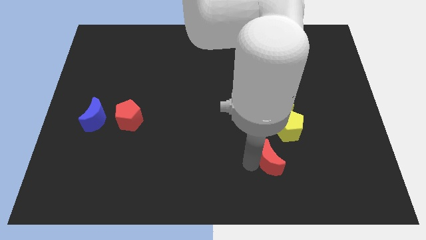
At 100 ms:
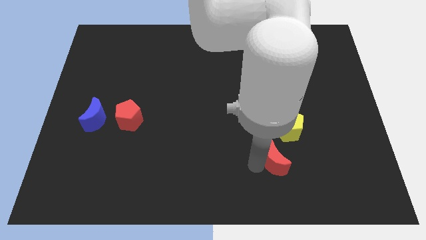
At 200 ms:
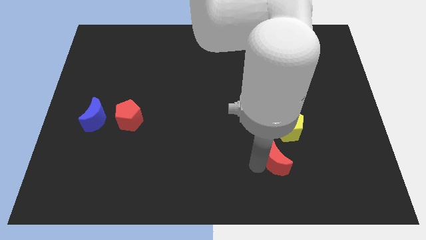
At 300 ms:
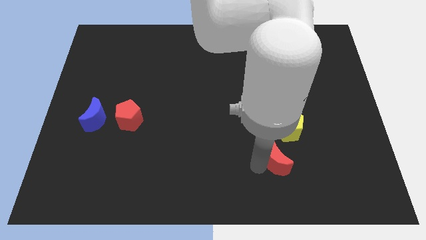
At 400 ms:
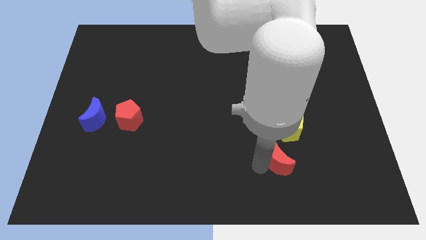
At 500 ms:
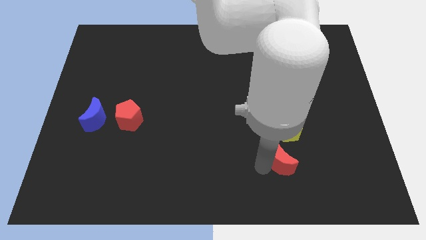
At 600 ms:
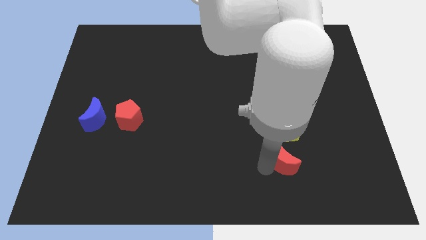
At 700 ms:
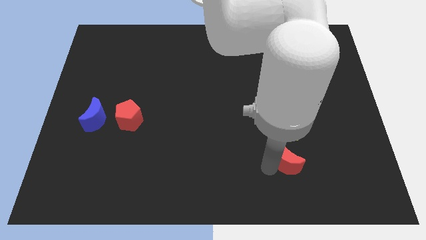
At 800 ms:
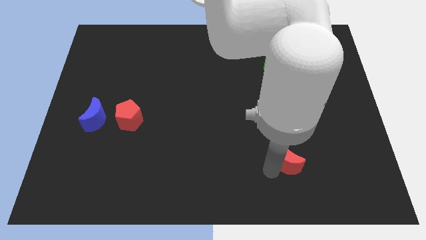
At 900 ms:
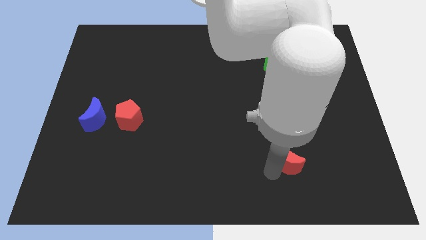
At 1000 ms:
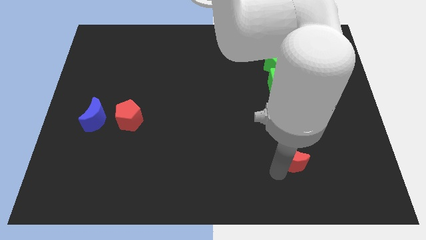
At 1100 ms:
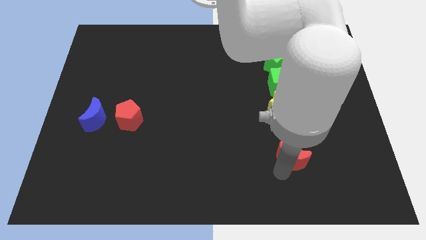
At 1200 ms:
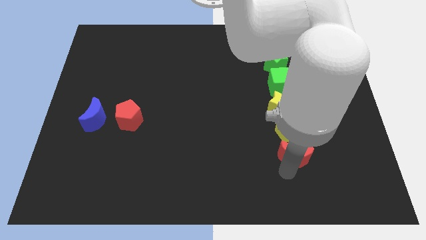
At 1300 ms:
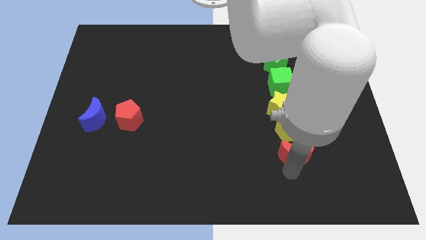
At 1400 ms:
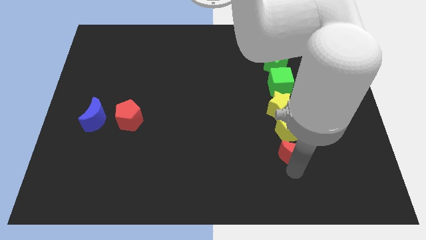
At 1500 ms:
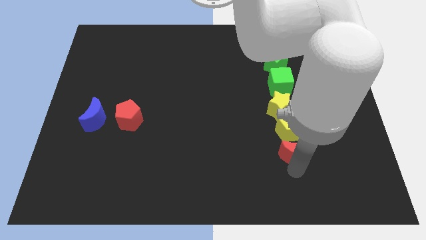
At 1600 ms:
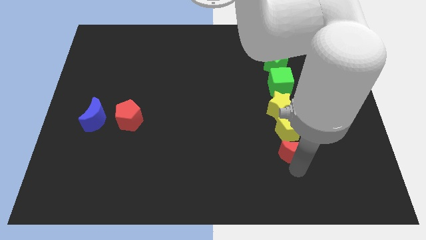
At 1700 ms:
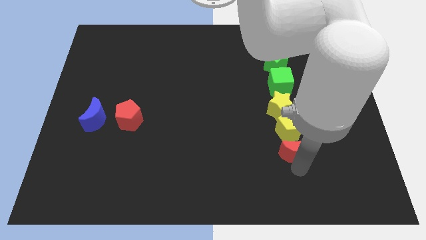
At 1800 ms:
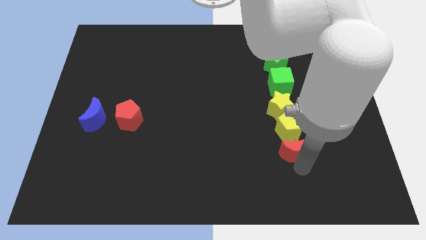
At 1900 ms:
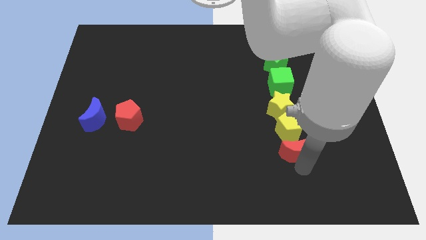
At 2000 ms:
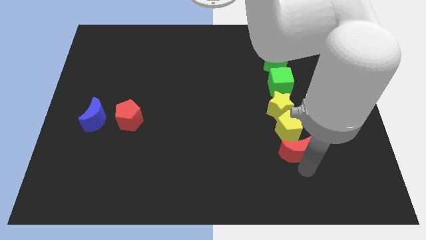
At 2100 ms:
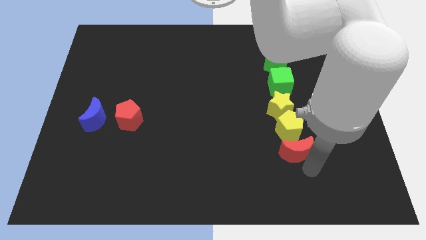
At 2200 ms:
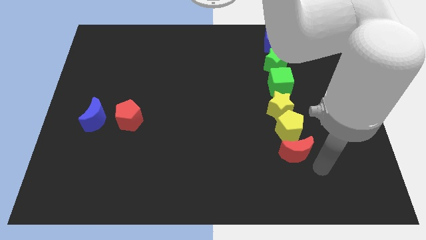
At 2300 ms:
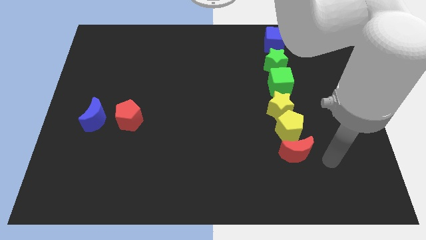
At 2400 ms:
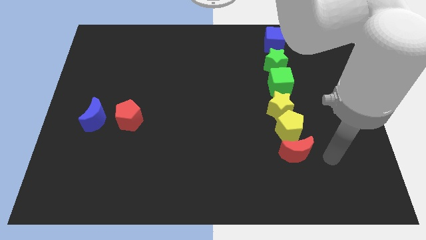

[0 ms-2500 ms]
place the red moon down to the yellow pentagon

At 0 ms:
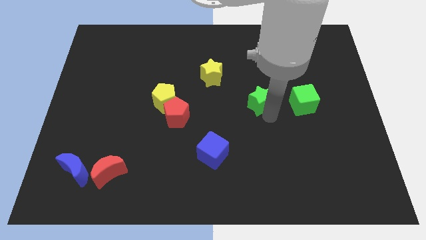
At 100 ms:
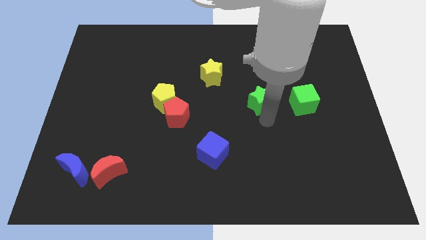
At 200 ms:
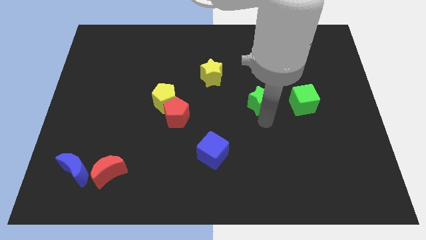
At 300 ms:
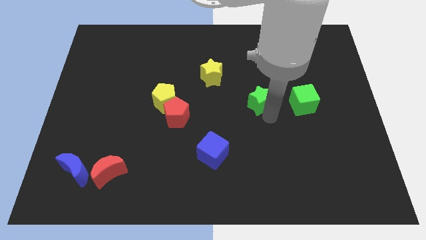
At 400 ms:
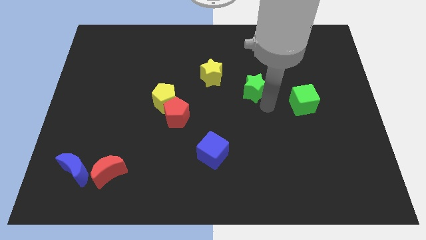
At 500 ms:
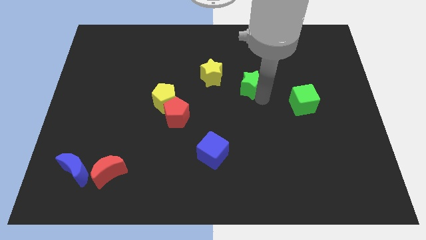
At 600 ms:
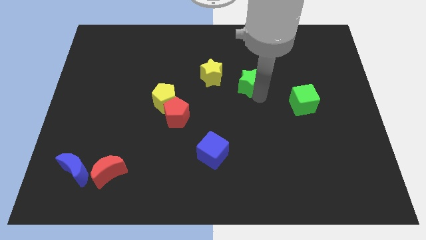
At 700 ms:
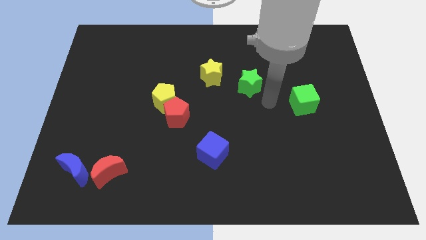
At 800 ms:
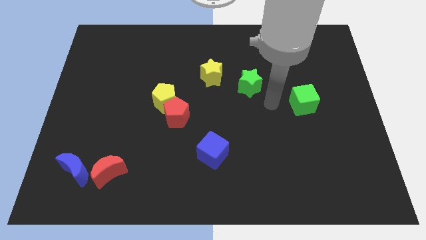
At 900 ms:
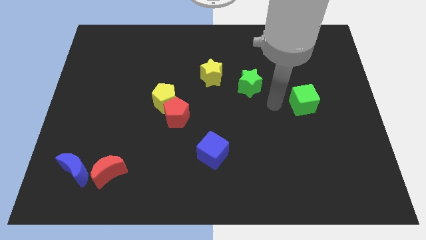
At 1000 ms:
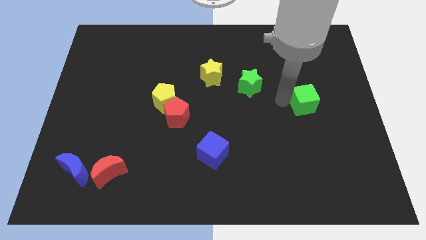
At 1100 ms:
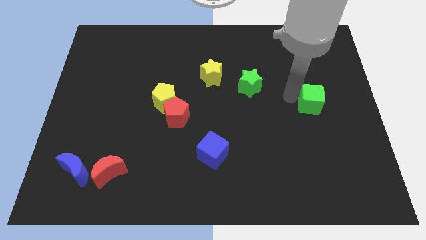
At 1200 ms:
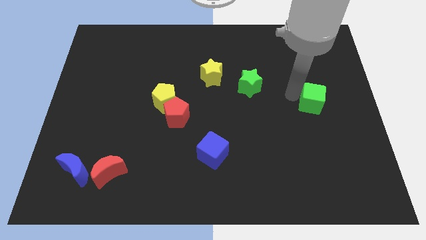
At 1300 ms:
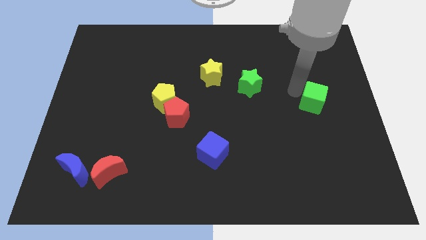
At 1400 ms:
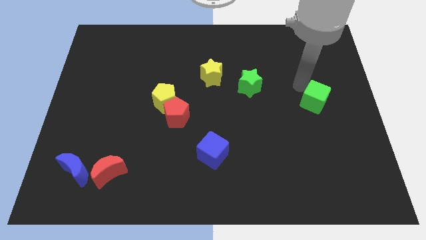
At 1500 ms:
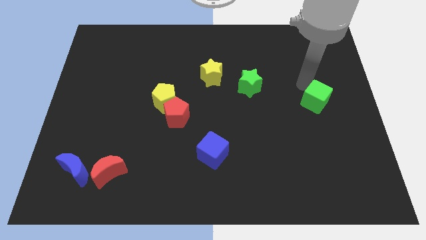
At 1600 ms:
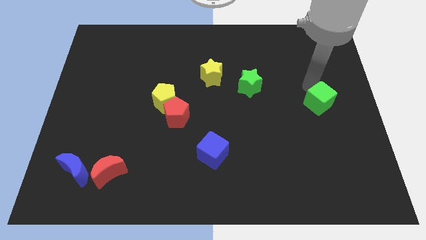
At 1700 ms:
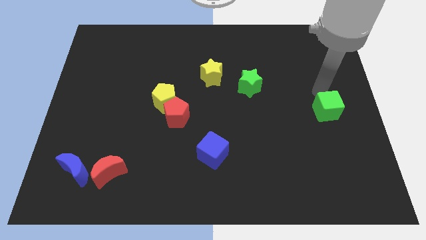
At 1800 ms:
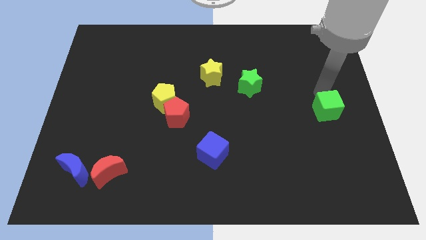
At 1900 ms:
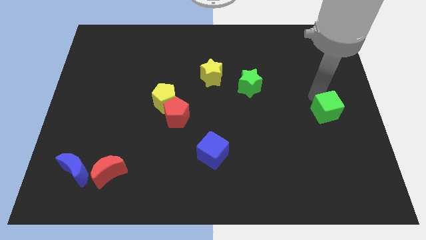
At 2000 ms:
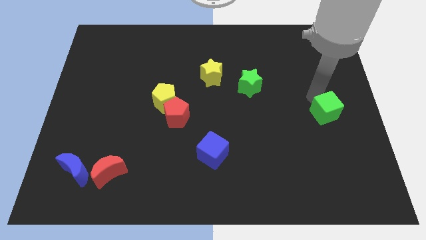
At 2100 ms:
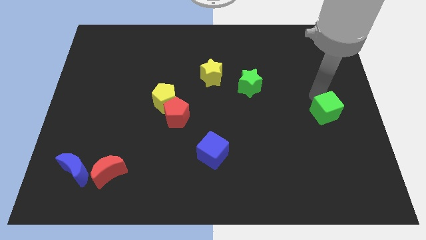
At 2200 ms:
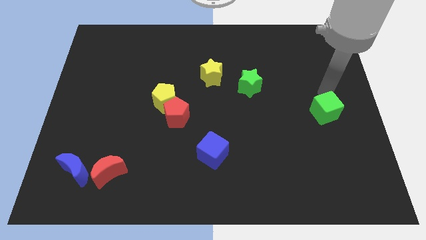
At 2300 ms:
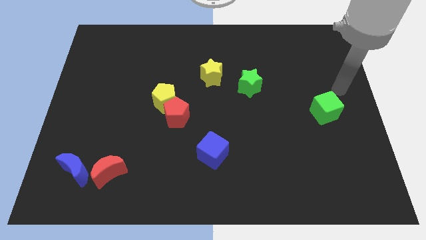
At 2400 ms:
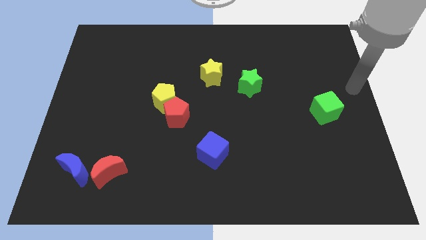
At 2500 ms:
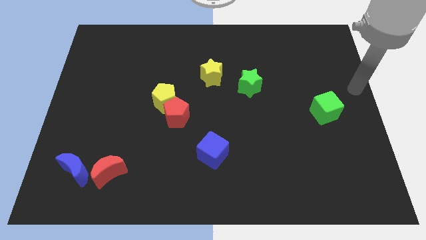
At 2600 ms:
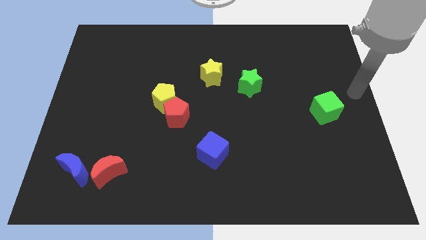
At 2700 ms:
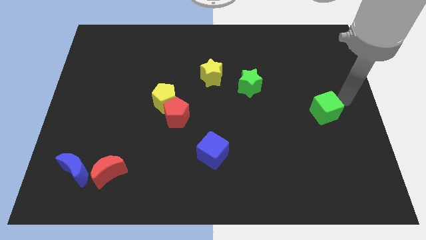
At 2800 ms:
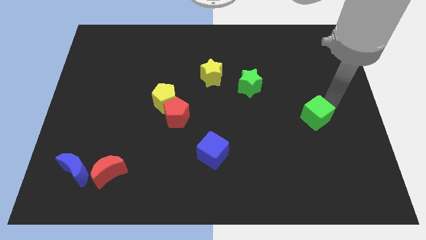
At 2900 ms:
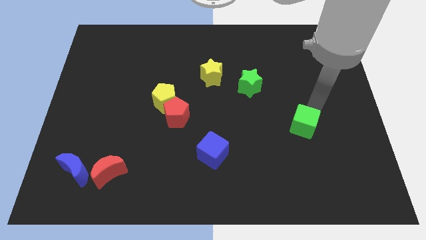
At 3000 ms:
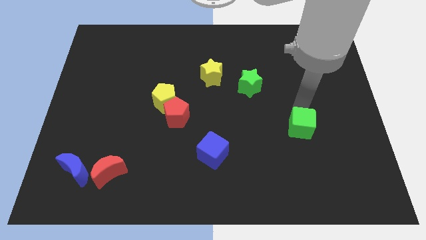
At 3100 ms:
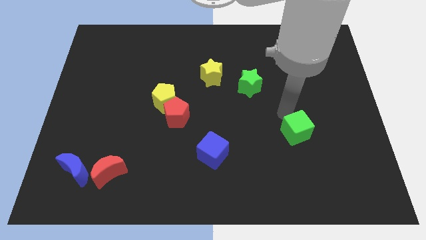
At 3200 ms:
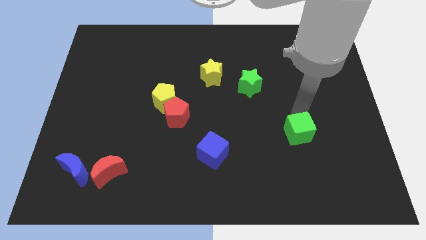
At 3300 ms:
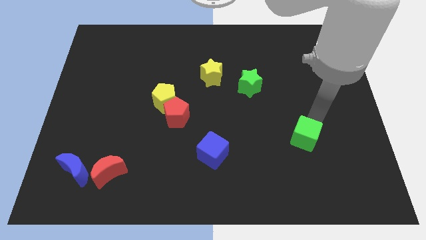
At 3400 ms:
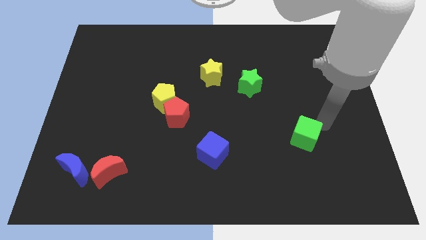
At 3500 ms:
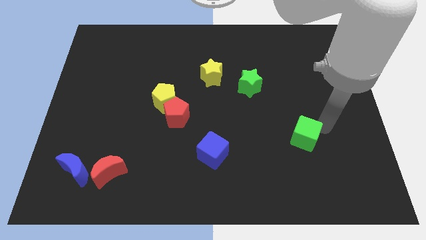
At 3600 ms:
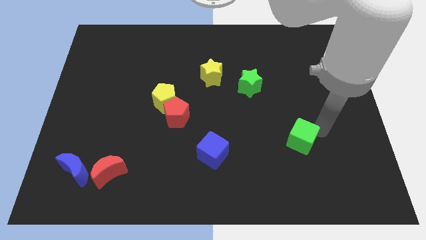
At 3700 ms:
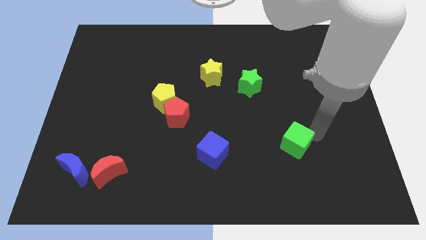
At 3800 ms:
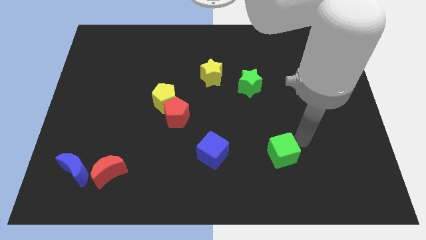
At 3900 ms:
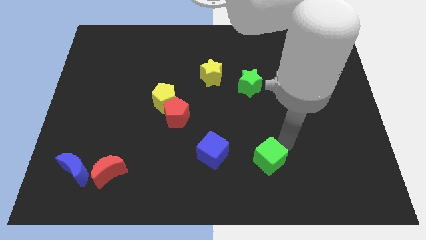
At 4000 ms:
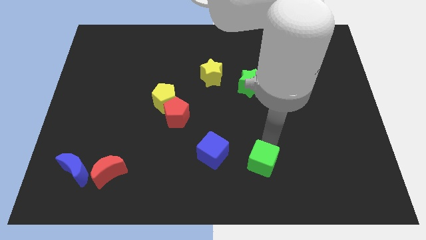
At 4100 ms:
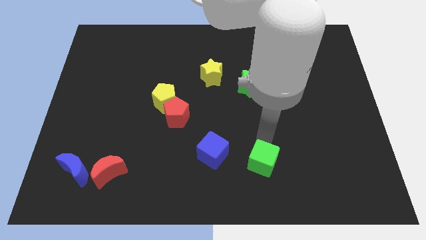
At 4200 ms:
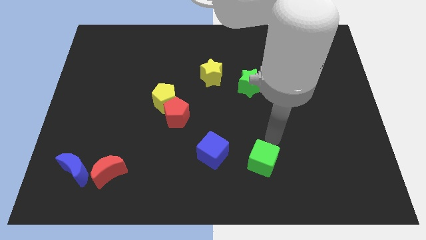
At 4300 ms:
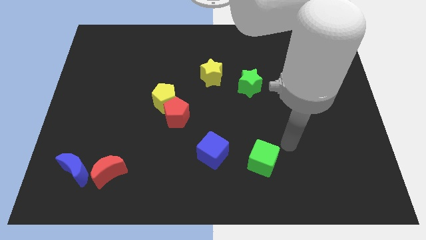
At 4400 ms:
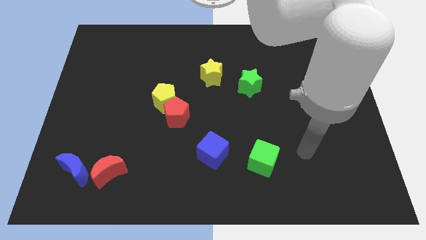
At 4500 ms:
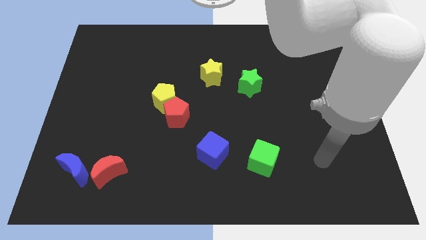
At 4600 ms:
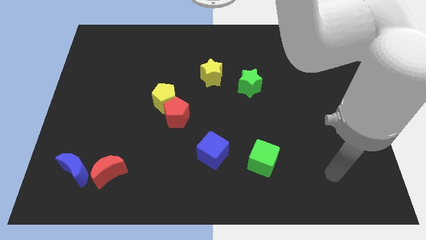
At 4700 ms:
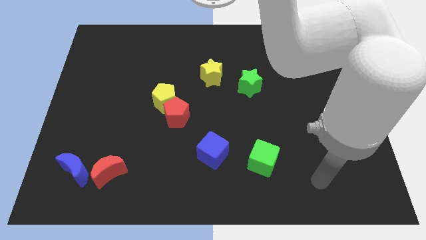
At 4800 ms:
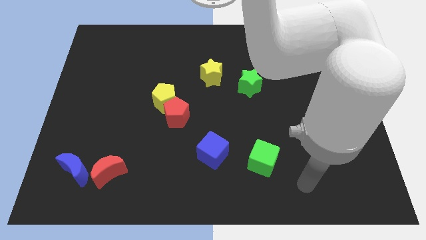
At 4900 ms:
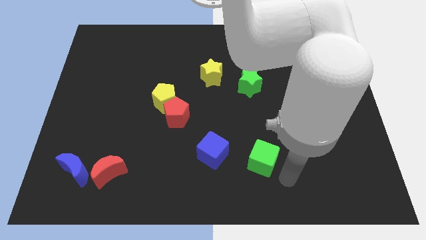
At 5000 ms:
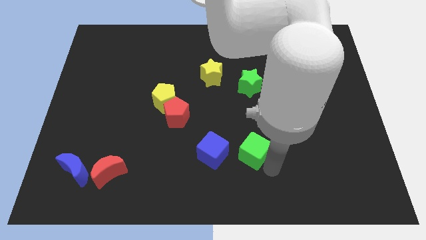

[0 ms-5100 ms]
push the green cube vertically at the bottom of the green star

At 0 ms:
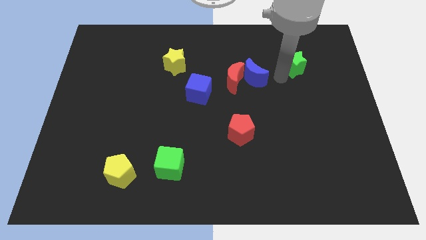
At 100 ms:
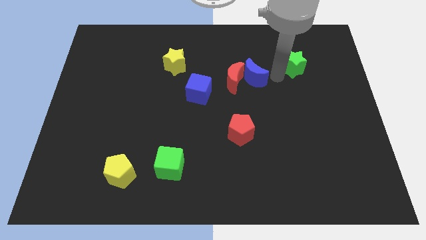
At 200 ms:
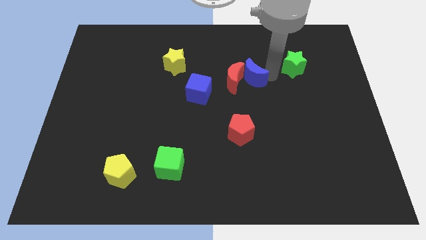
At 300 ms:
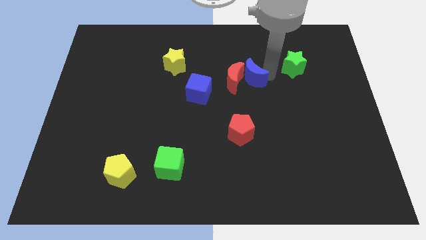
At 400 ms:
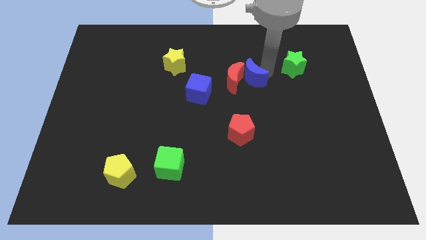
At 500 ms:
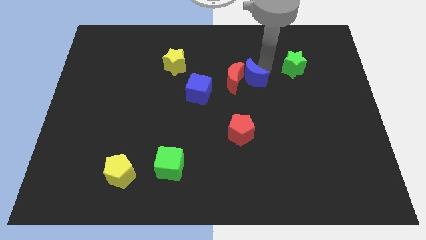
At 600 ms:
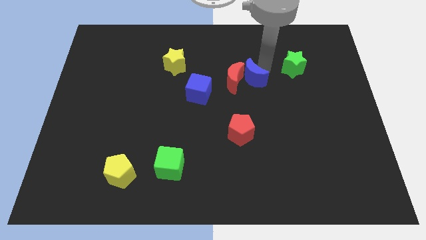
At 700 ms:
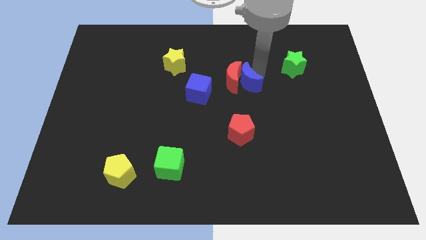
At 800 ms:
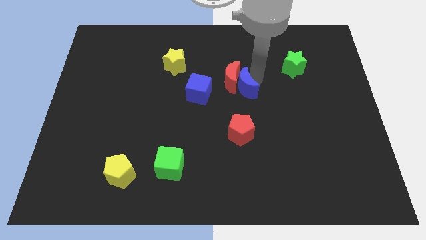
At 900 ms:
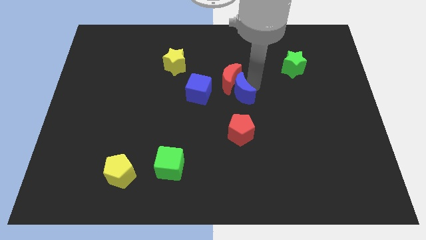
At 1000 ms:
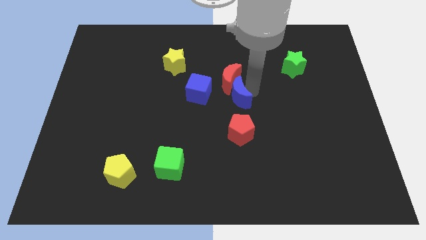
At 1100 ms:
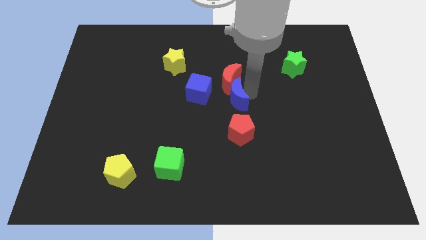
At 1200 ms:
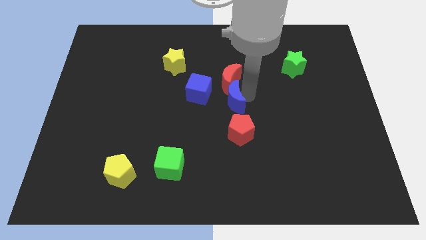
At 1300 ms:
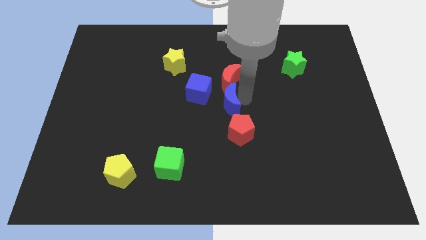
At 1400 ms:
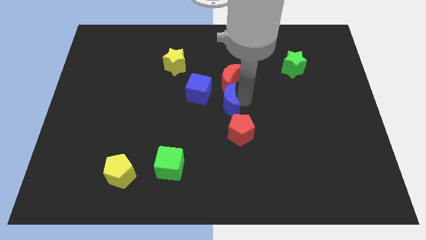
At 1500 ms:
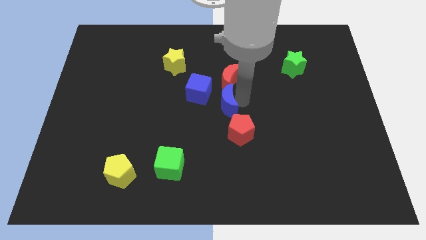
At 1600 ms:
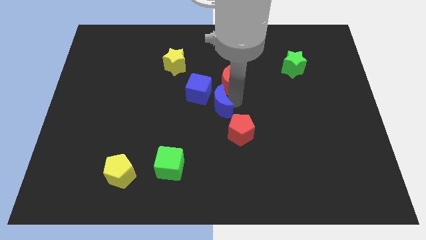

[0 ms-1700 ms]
move the blue moon towards the left
